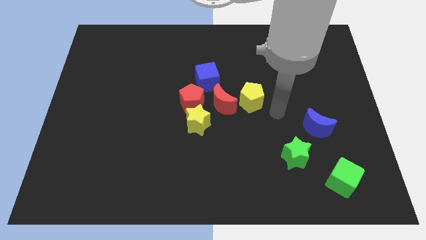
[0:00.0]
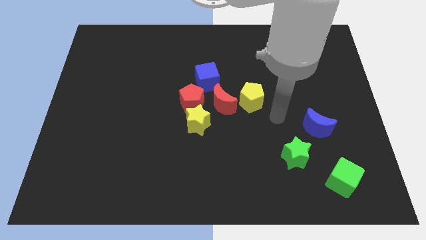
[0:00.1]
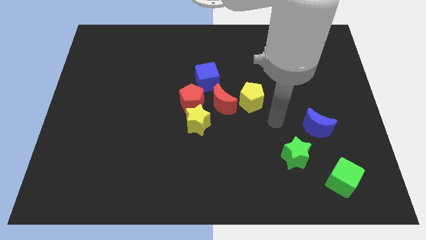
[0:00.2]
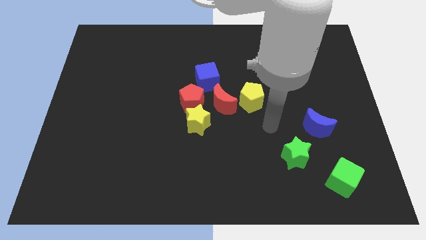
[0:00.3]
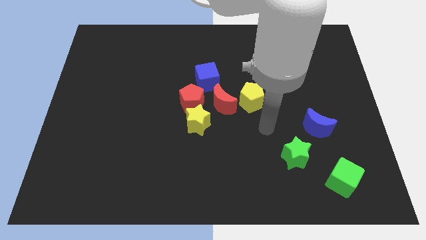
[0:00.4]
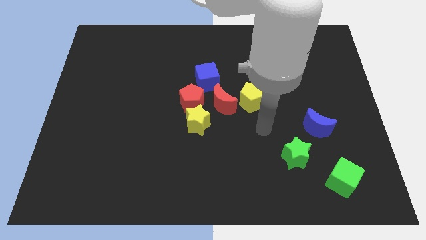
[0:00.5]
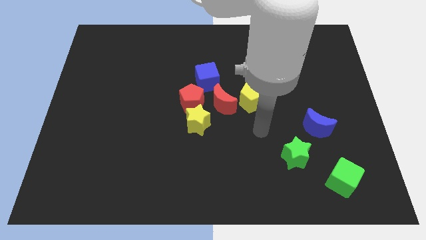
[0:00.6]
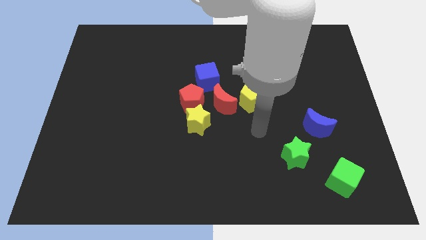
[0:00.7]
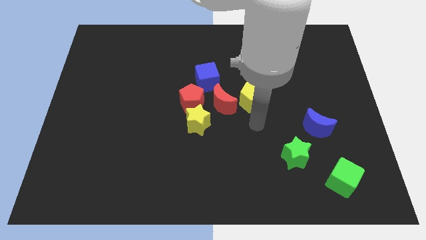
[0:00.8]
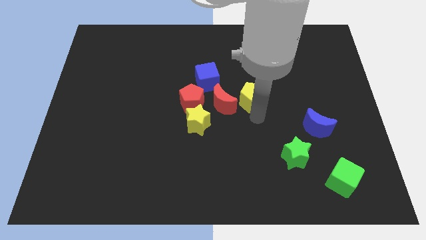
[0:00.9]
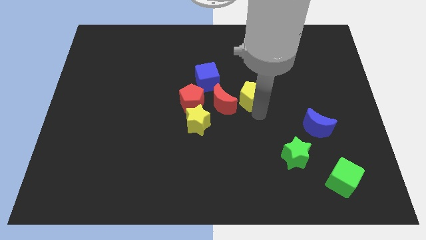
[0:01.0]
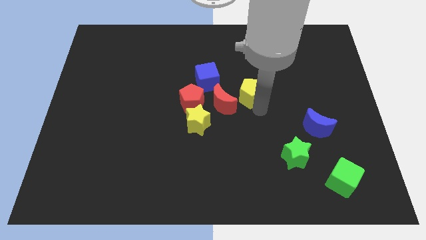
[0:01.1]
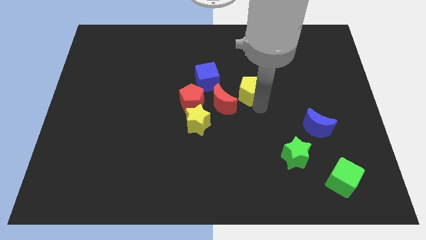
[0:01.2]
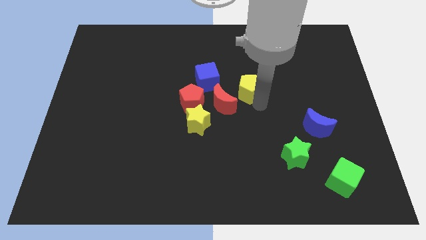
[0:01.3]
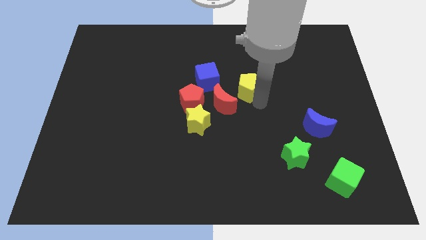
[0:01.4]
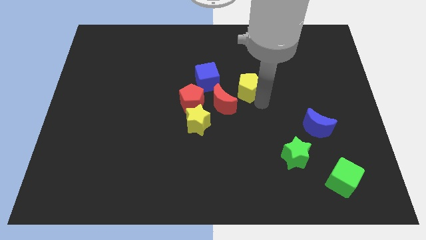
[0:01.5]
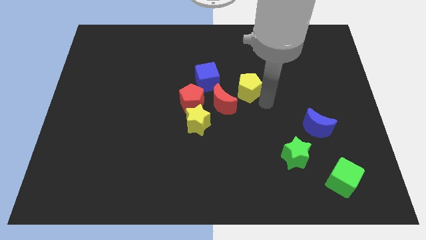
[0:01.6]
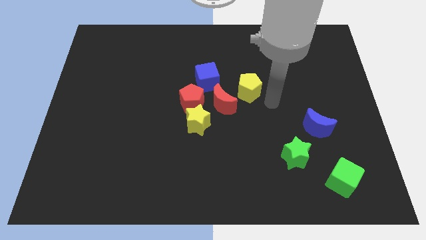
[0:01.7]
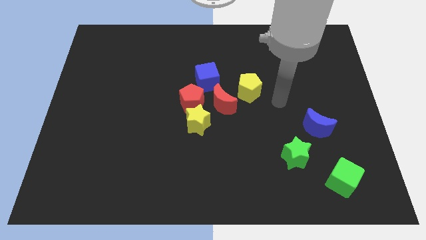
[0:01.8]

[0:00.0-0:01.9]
tap the yellow pentagon at the bottom side

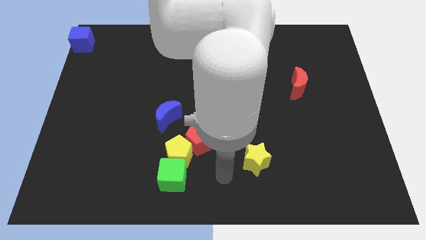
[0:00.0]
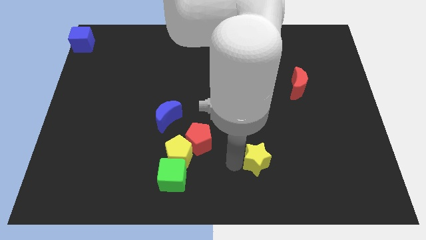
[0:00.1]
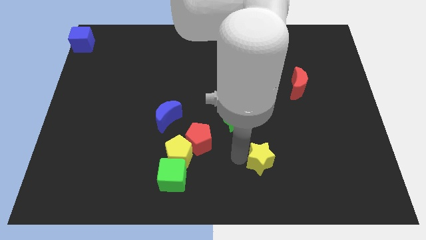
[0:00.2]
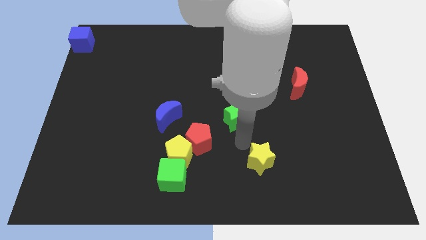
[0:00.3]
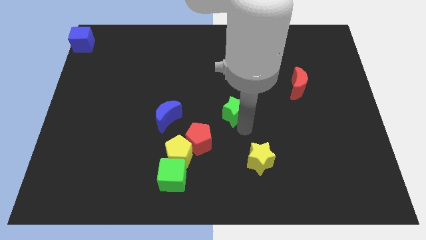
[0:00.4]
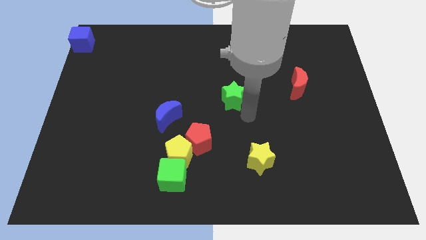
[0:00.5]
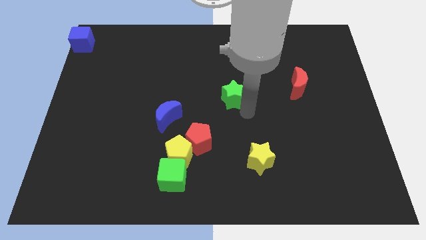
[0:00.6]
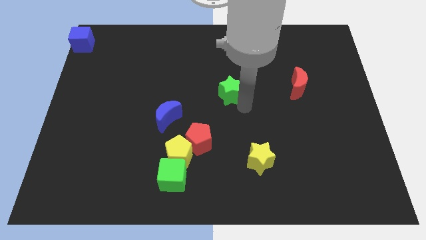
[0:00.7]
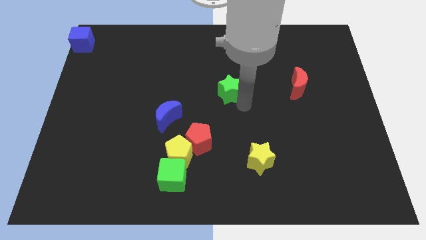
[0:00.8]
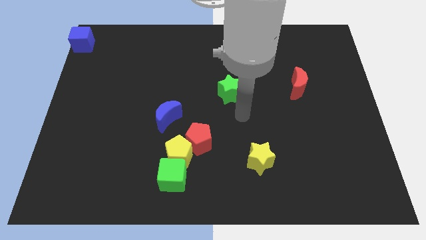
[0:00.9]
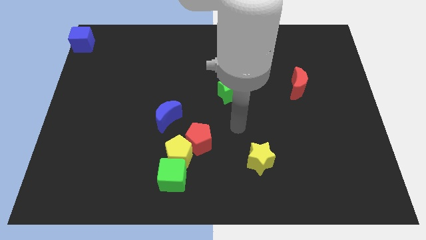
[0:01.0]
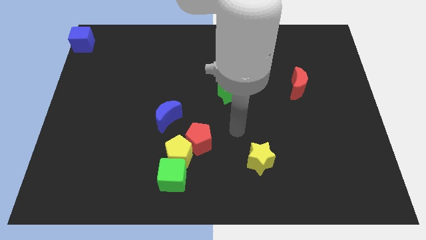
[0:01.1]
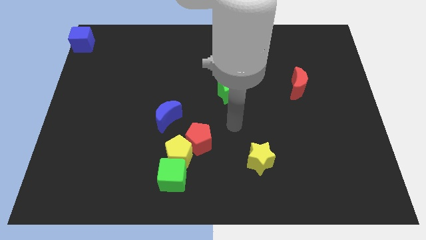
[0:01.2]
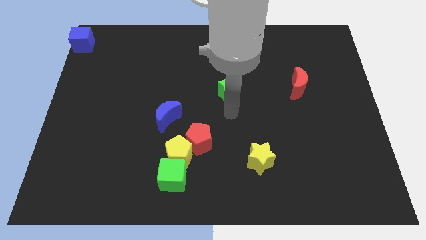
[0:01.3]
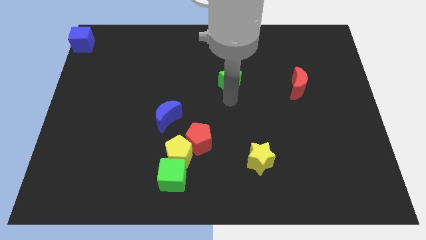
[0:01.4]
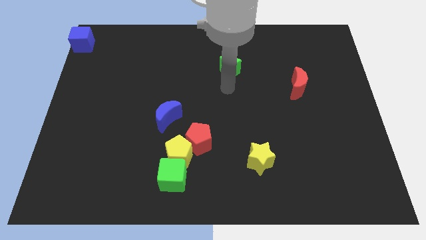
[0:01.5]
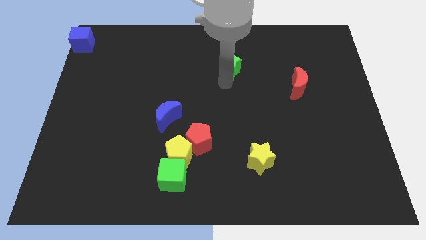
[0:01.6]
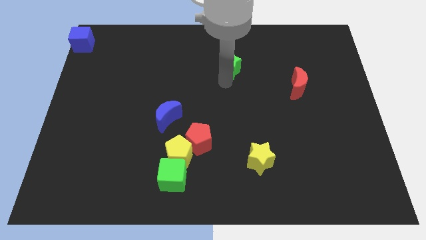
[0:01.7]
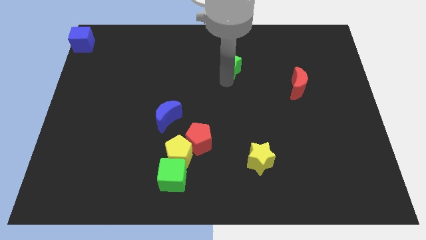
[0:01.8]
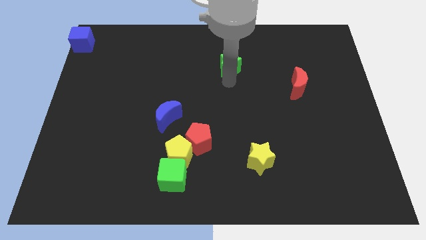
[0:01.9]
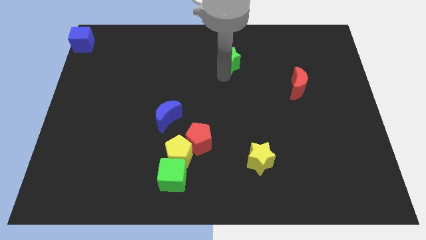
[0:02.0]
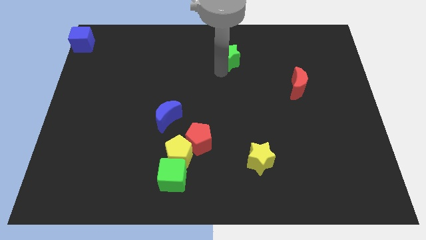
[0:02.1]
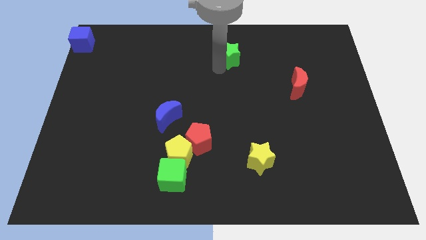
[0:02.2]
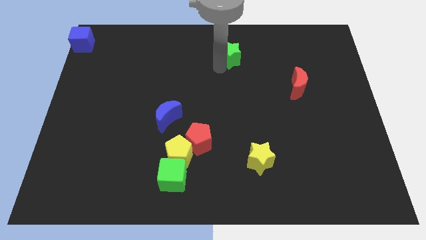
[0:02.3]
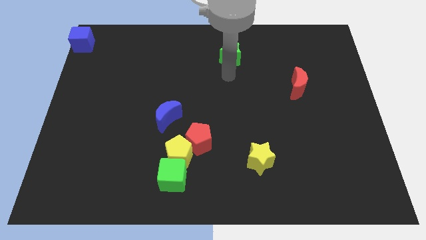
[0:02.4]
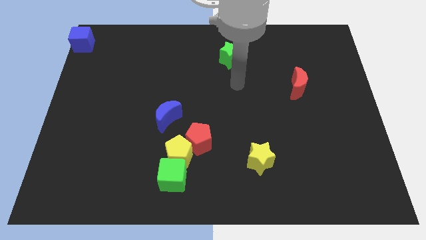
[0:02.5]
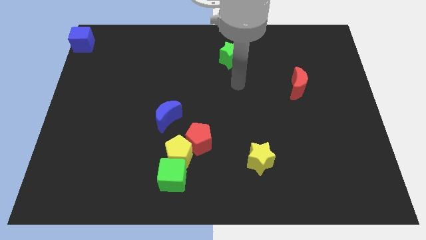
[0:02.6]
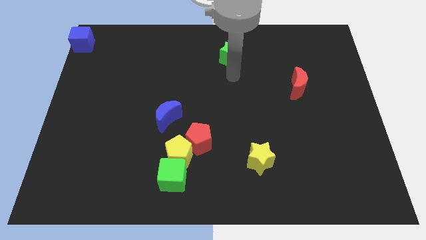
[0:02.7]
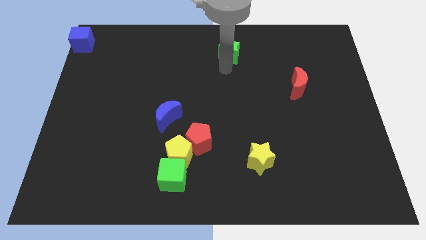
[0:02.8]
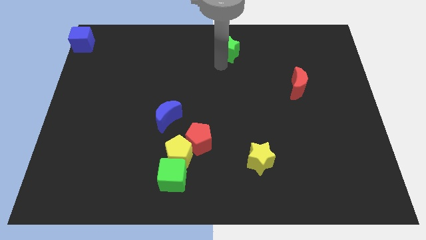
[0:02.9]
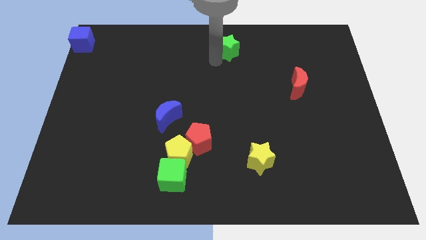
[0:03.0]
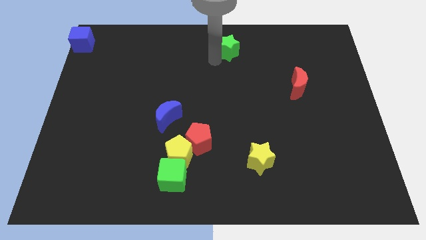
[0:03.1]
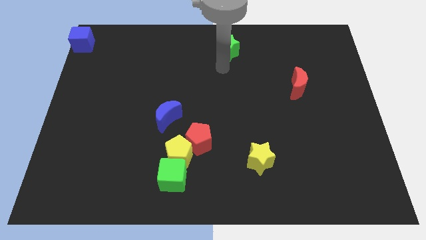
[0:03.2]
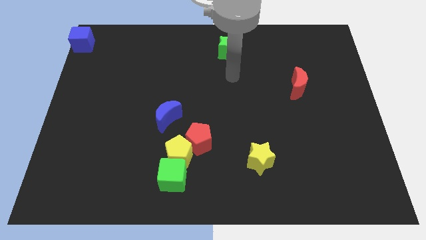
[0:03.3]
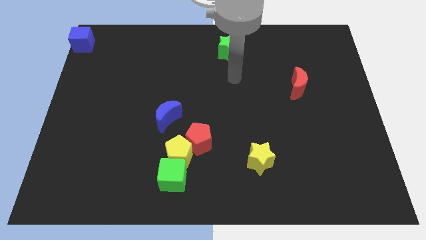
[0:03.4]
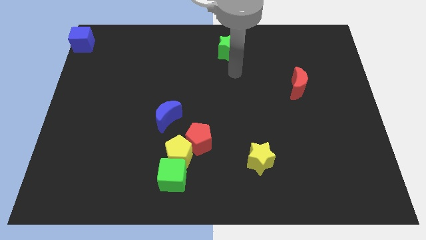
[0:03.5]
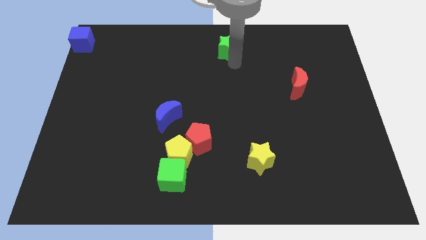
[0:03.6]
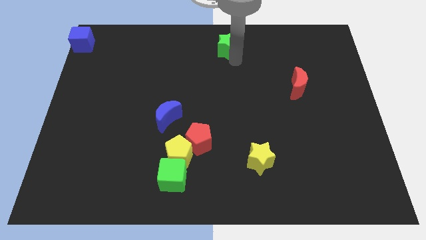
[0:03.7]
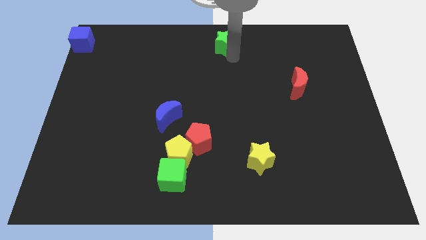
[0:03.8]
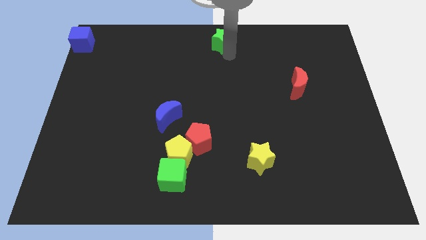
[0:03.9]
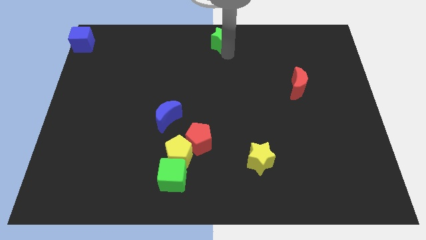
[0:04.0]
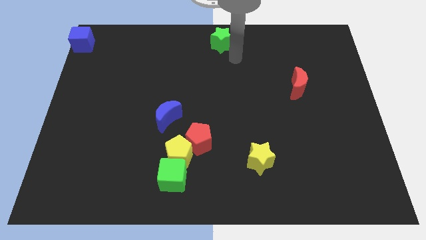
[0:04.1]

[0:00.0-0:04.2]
move the green star to the top center of the board

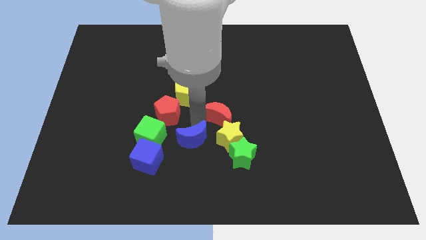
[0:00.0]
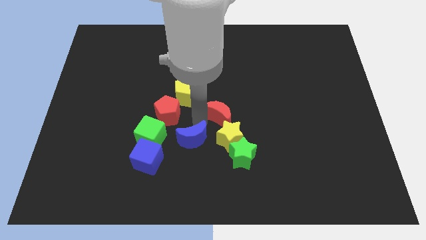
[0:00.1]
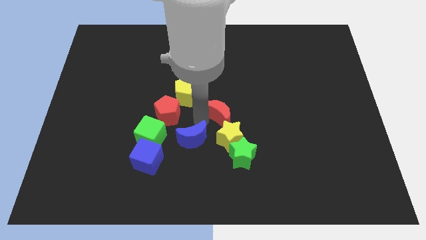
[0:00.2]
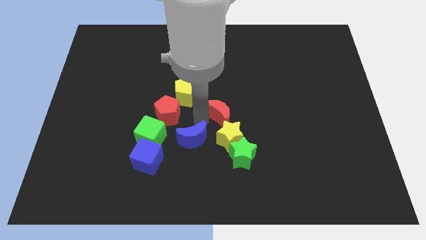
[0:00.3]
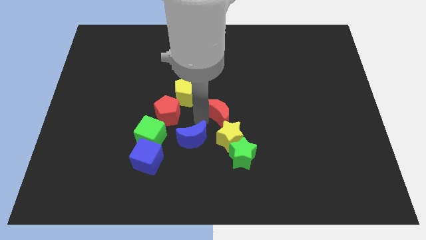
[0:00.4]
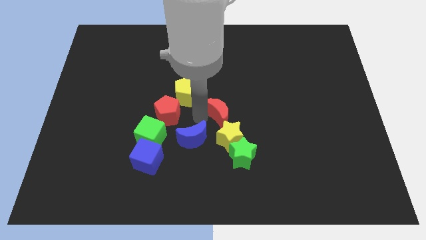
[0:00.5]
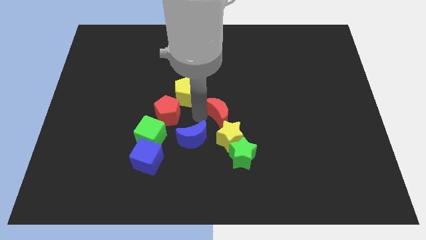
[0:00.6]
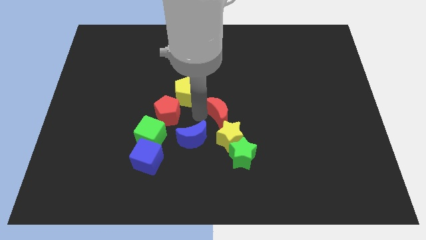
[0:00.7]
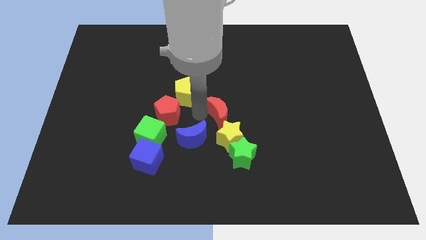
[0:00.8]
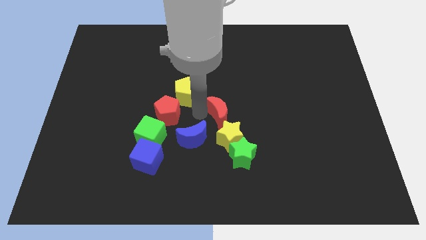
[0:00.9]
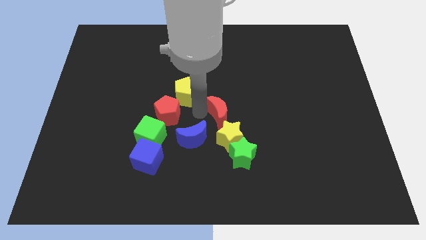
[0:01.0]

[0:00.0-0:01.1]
push the red crescent slightly to the top

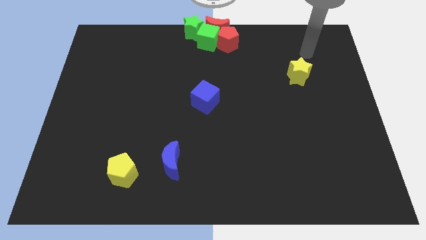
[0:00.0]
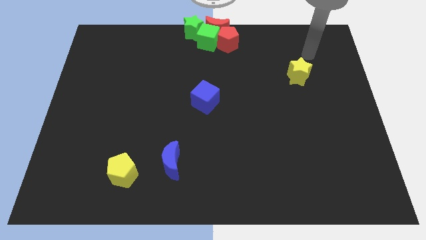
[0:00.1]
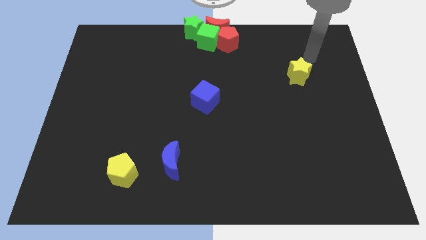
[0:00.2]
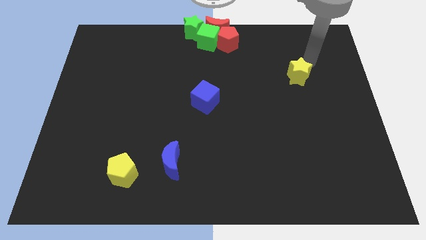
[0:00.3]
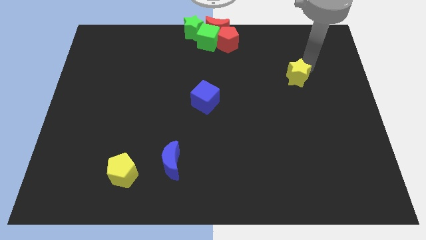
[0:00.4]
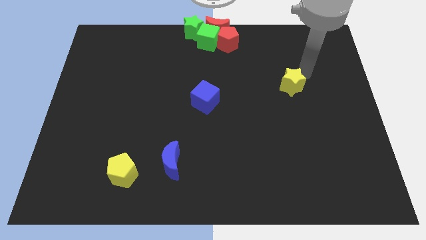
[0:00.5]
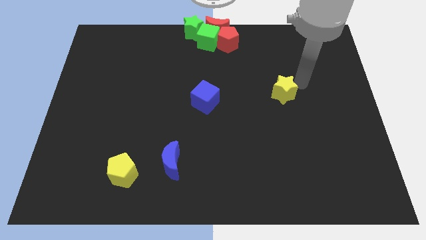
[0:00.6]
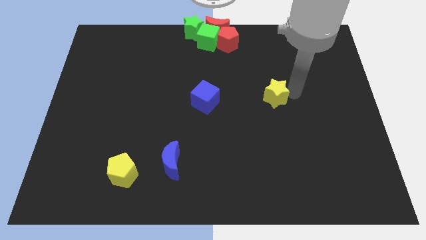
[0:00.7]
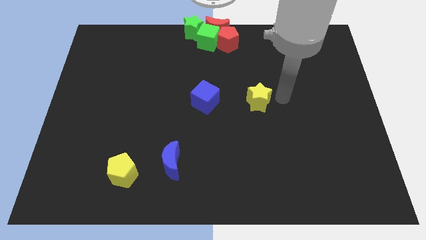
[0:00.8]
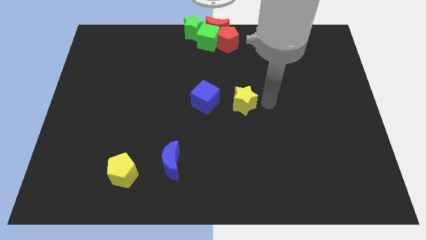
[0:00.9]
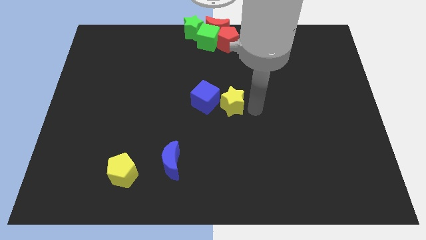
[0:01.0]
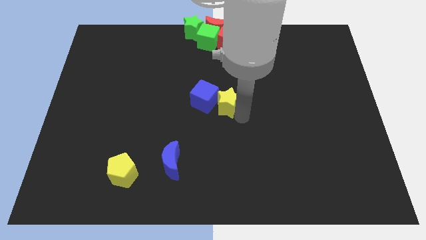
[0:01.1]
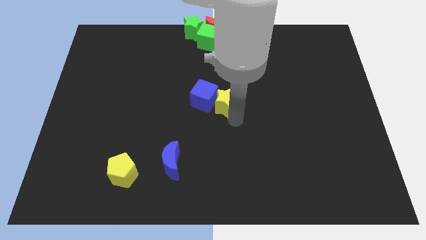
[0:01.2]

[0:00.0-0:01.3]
move the yellow star into the right side of the blue cube

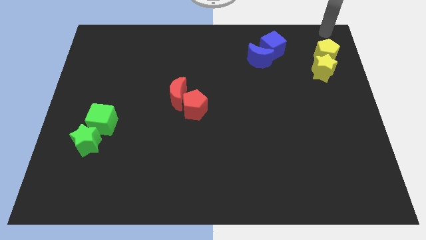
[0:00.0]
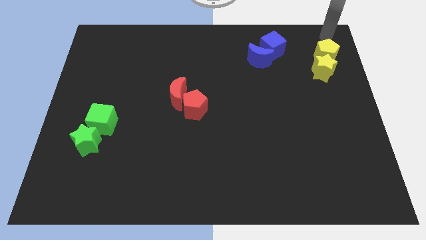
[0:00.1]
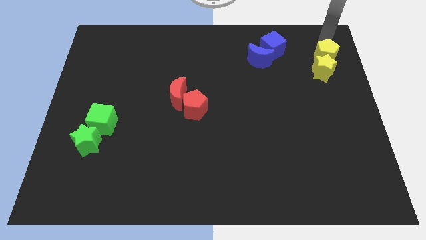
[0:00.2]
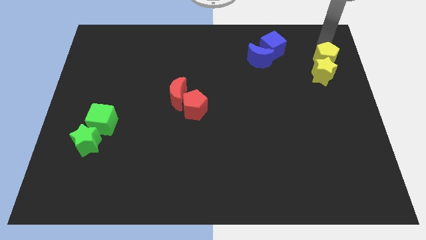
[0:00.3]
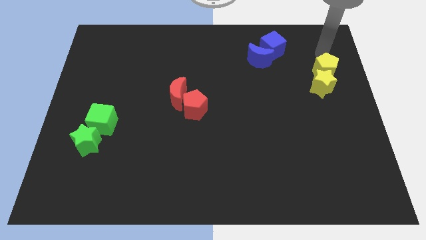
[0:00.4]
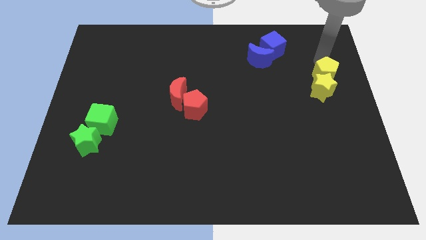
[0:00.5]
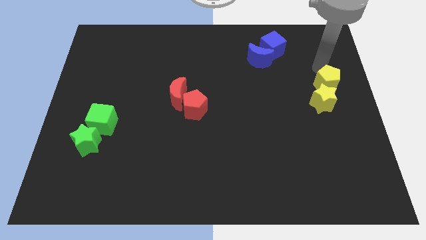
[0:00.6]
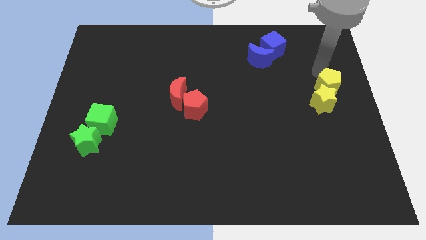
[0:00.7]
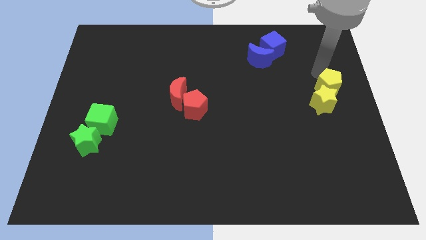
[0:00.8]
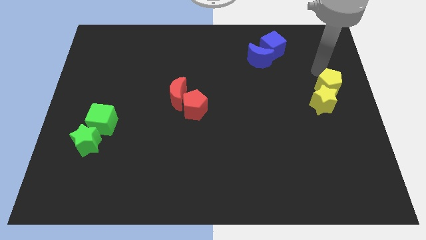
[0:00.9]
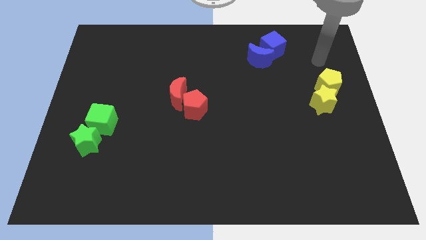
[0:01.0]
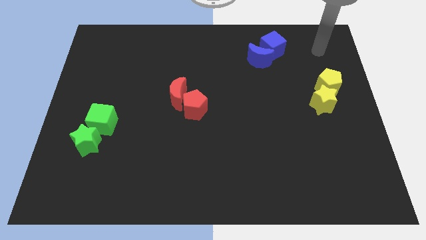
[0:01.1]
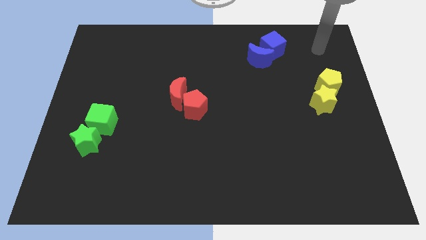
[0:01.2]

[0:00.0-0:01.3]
push the yellow blocks towards the center left
